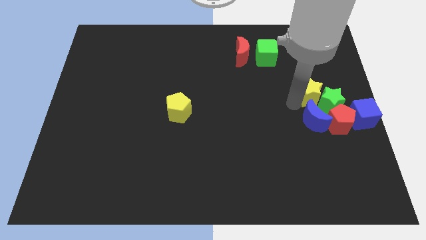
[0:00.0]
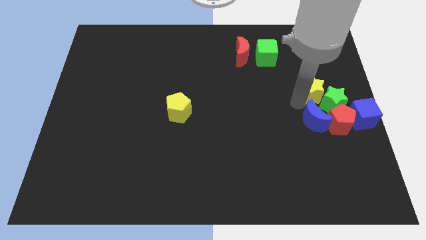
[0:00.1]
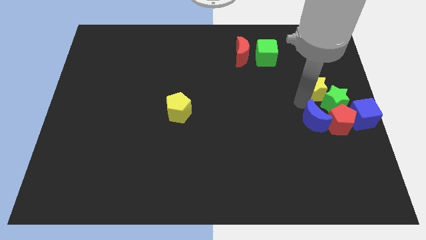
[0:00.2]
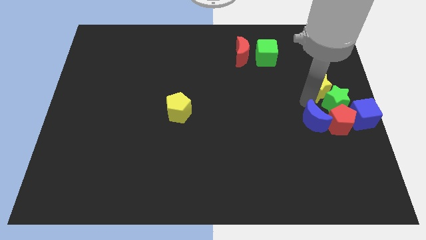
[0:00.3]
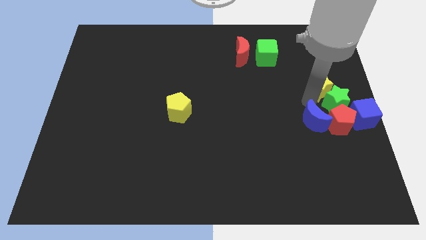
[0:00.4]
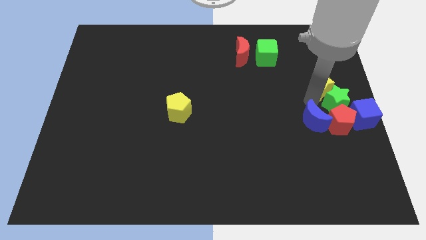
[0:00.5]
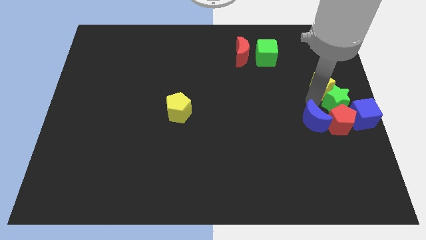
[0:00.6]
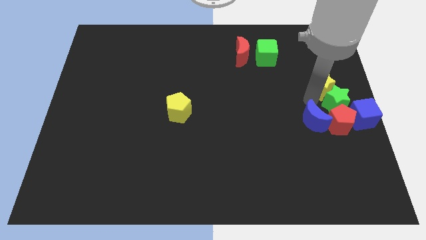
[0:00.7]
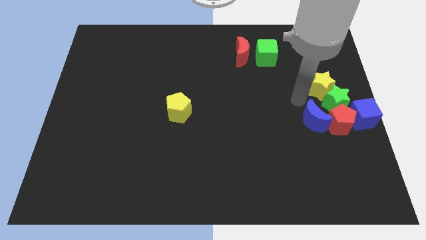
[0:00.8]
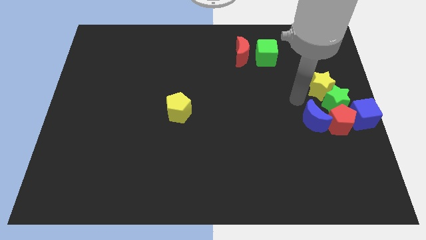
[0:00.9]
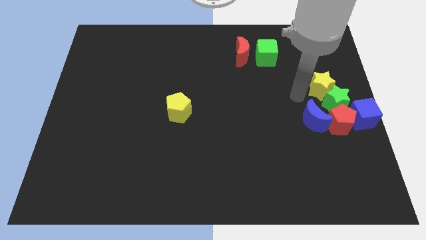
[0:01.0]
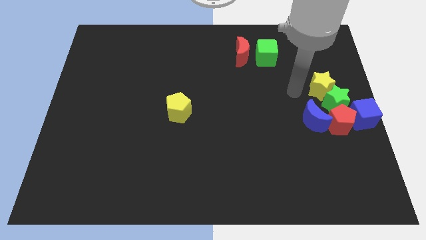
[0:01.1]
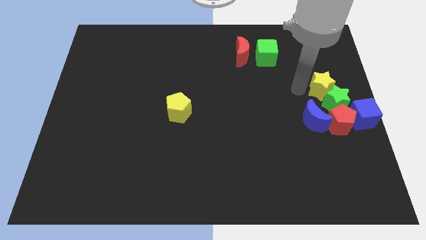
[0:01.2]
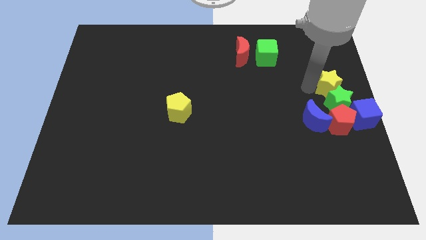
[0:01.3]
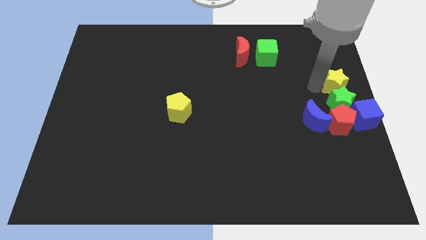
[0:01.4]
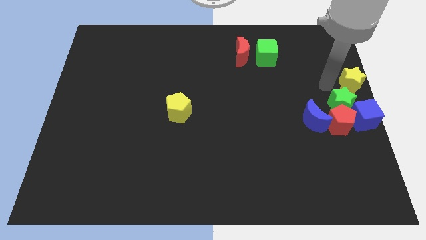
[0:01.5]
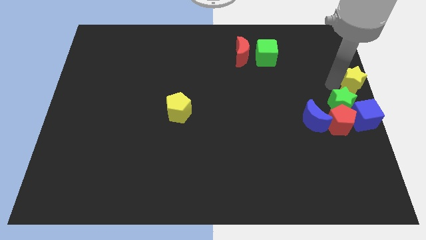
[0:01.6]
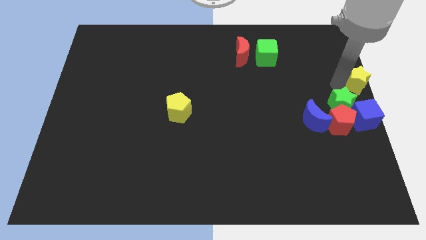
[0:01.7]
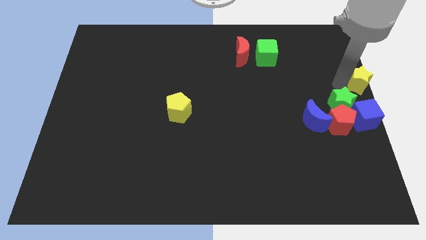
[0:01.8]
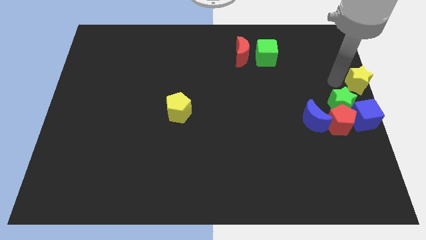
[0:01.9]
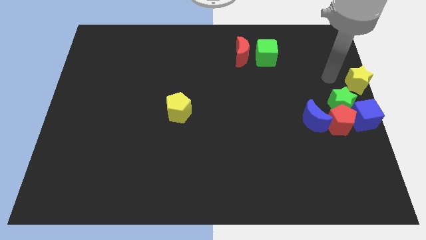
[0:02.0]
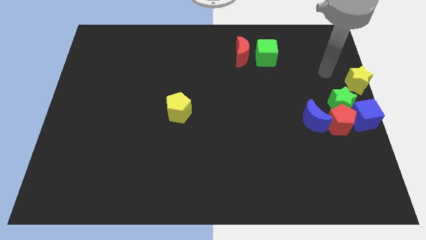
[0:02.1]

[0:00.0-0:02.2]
push the yellow star to the centre right of the board above the group of blocks

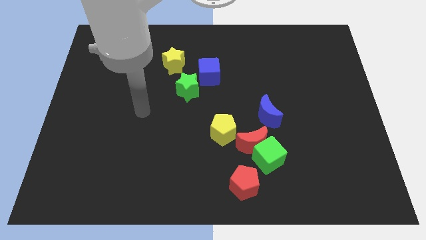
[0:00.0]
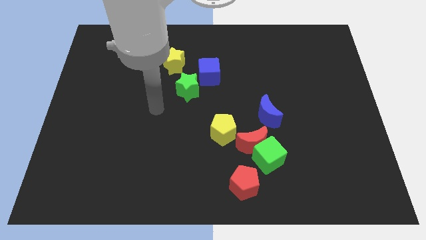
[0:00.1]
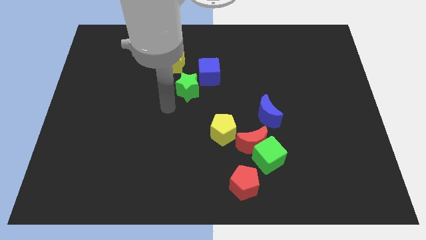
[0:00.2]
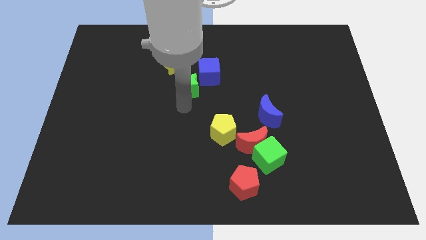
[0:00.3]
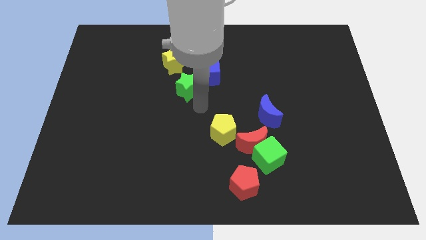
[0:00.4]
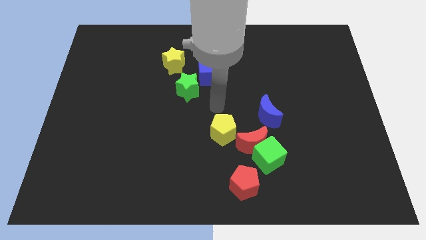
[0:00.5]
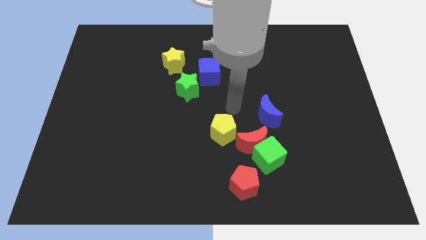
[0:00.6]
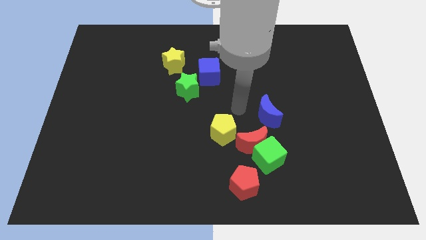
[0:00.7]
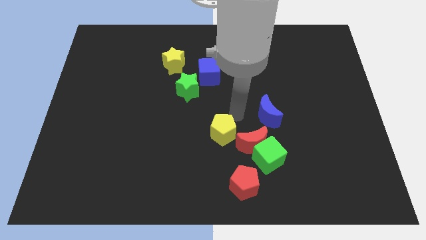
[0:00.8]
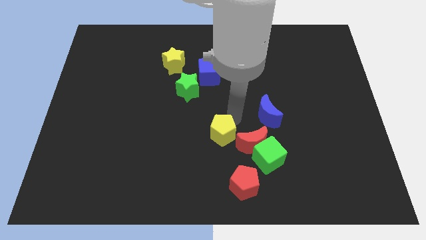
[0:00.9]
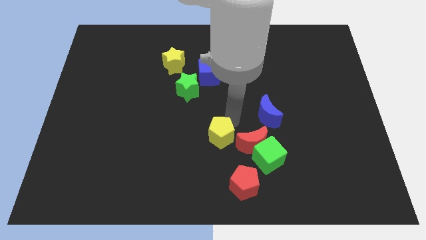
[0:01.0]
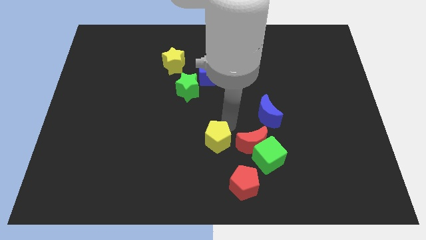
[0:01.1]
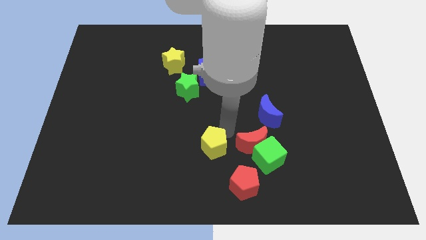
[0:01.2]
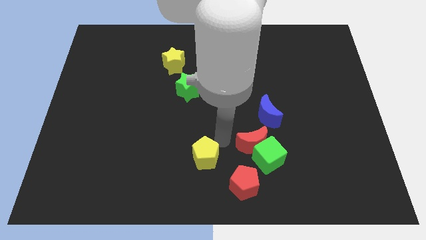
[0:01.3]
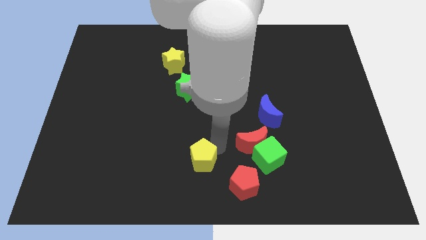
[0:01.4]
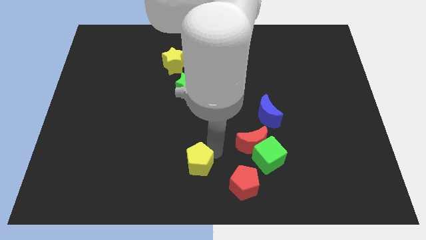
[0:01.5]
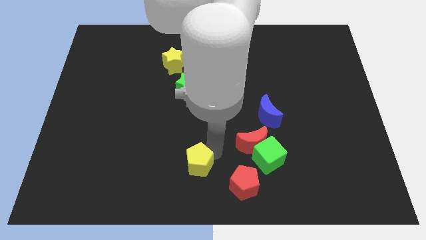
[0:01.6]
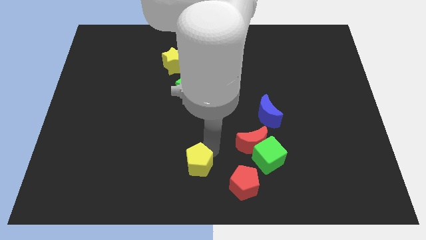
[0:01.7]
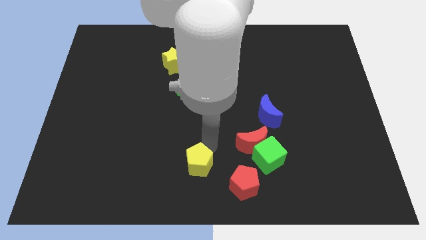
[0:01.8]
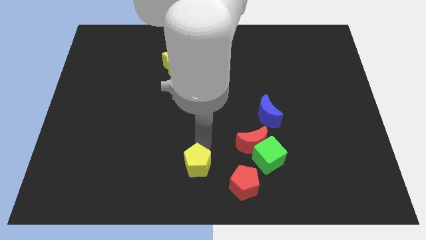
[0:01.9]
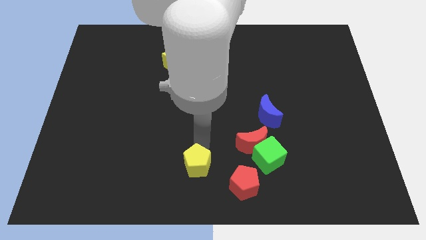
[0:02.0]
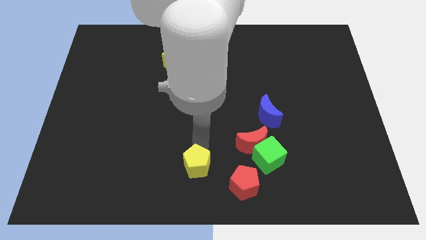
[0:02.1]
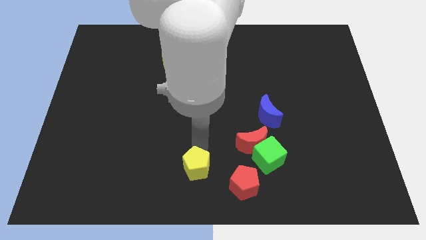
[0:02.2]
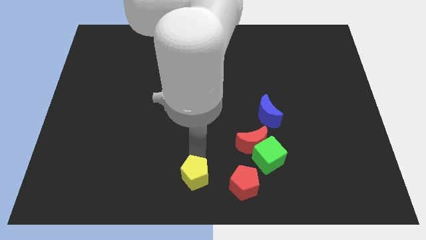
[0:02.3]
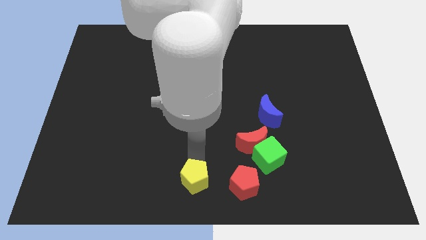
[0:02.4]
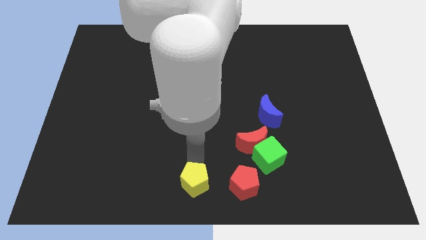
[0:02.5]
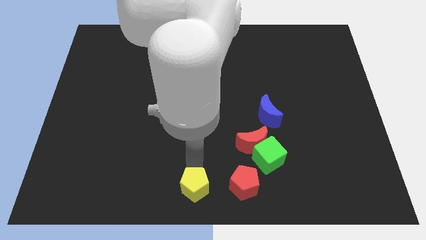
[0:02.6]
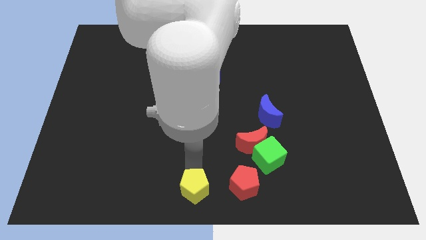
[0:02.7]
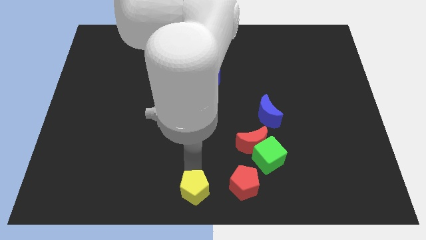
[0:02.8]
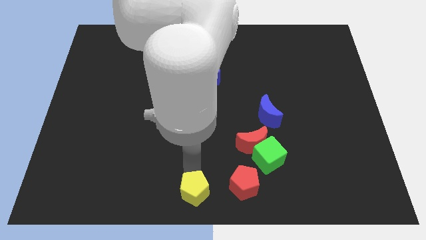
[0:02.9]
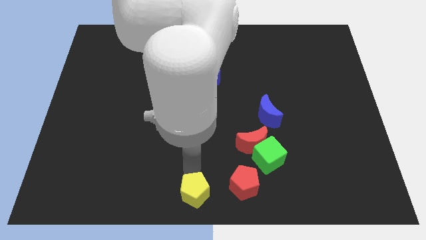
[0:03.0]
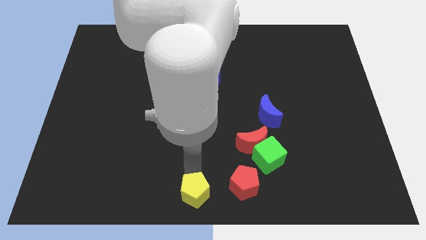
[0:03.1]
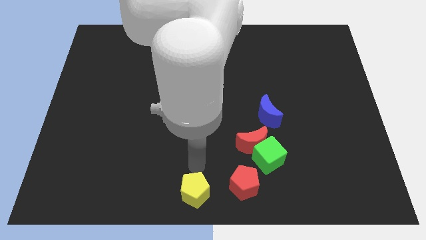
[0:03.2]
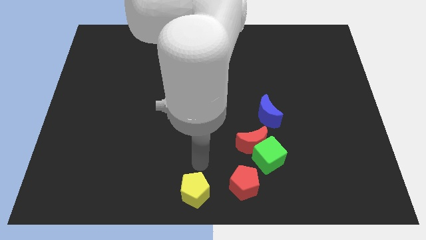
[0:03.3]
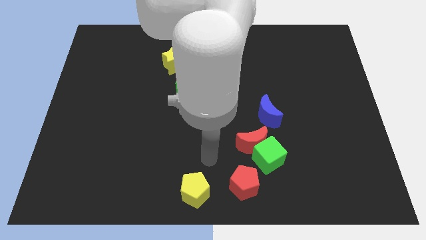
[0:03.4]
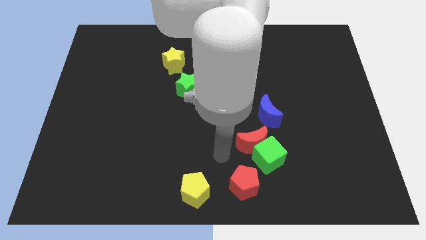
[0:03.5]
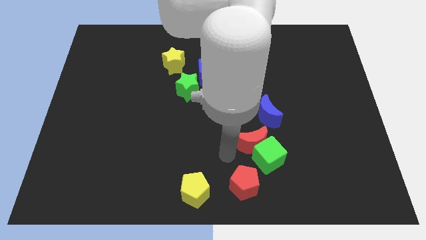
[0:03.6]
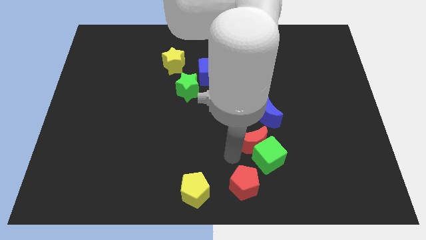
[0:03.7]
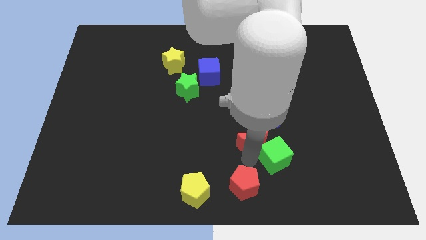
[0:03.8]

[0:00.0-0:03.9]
move the yellow pentagon to the bottom center of the board

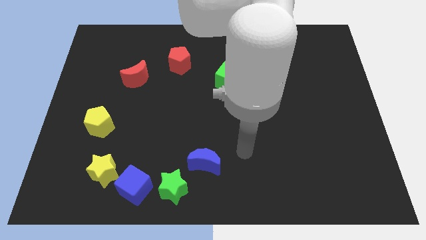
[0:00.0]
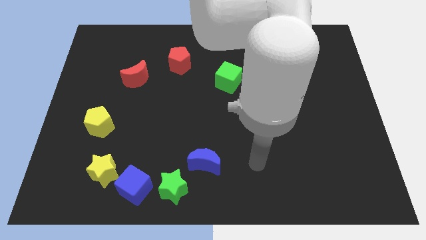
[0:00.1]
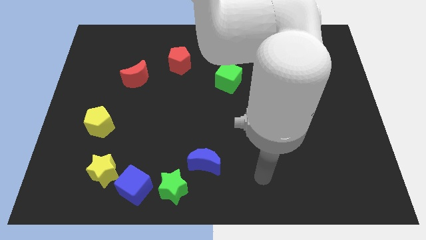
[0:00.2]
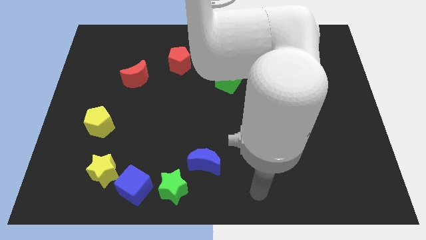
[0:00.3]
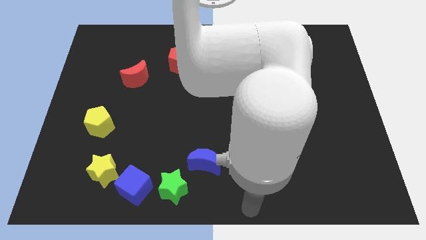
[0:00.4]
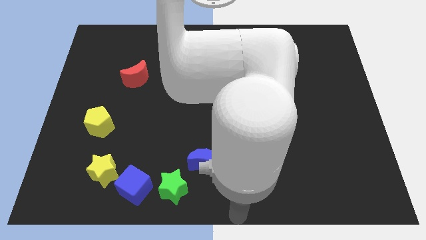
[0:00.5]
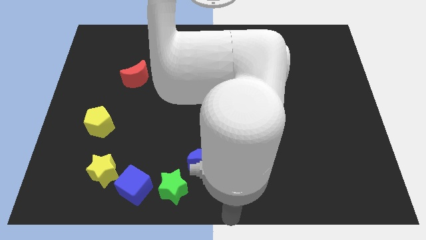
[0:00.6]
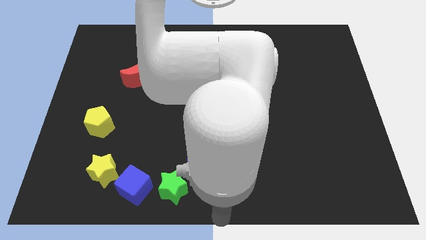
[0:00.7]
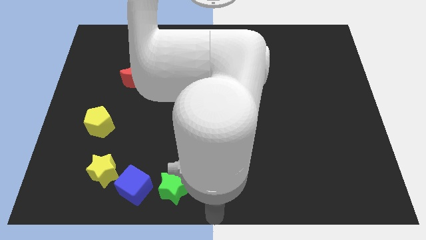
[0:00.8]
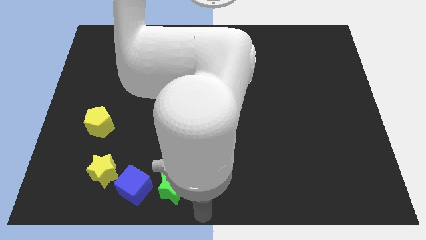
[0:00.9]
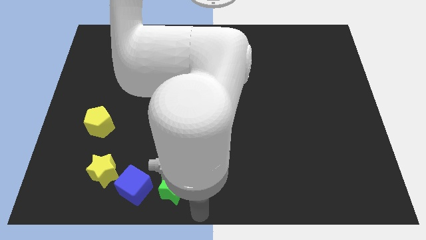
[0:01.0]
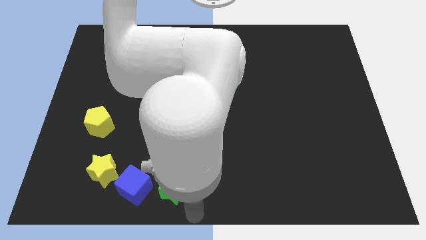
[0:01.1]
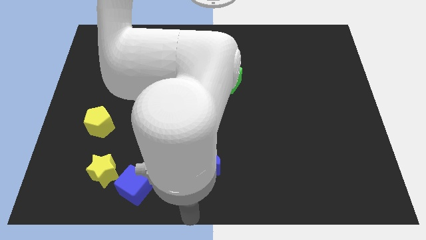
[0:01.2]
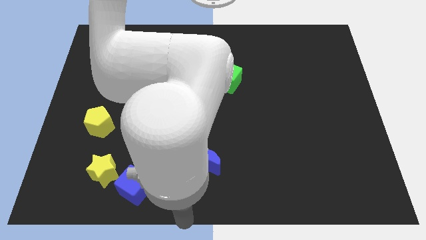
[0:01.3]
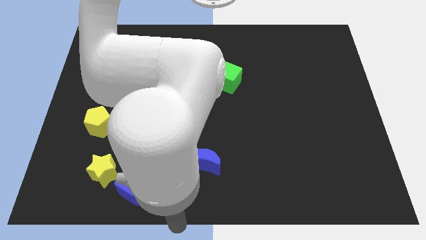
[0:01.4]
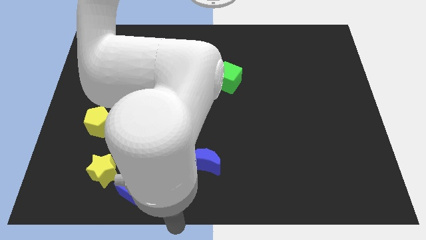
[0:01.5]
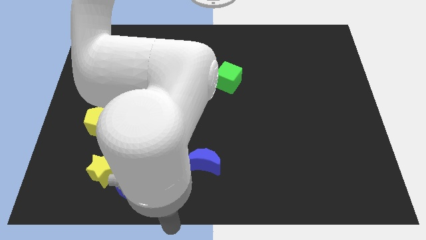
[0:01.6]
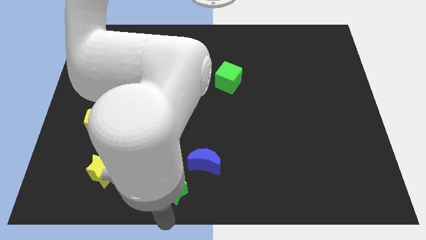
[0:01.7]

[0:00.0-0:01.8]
move your arm to the bottom of the green star

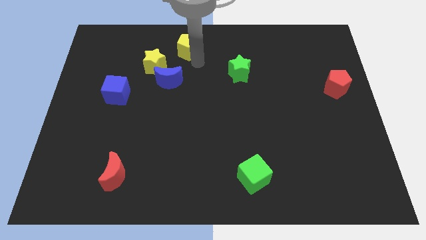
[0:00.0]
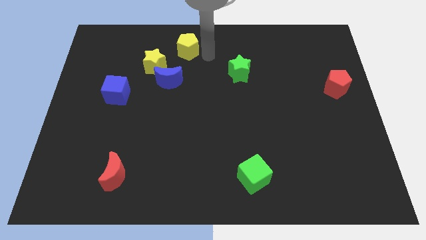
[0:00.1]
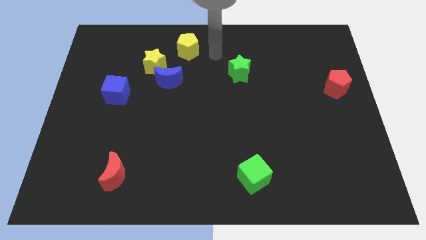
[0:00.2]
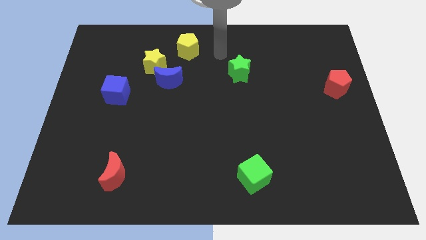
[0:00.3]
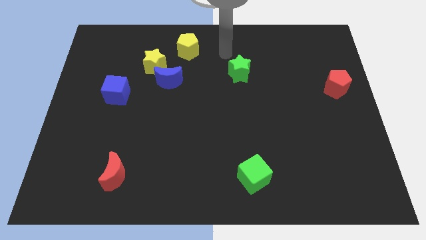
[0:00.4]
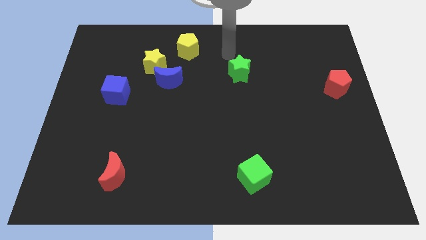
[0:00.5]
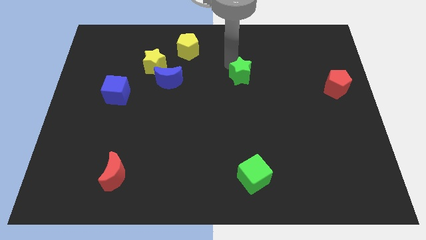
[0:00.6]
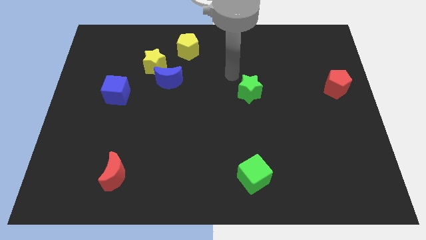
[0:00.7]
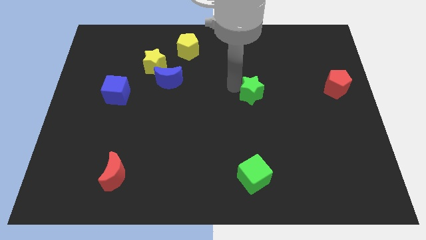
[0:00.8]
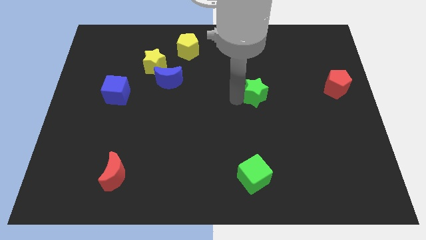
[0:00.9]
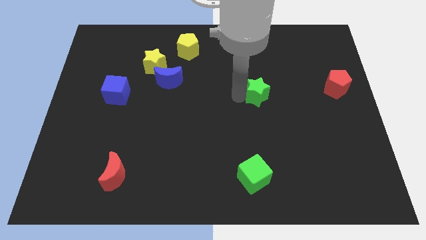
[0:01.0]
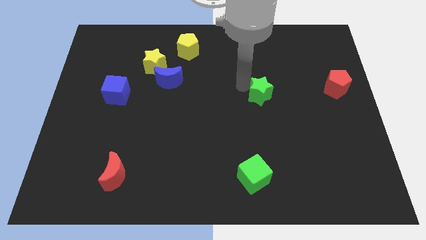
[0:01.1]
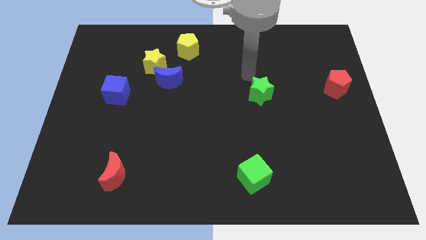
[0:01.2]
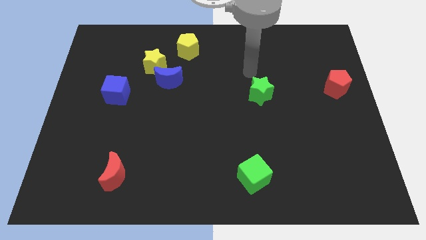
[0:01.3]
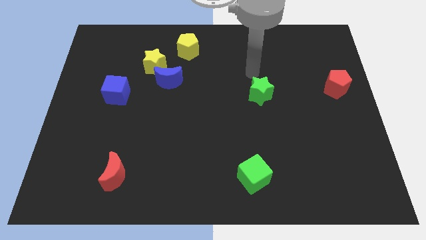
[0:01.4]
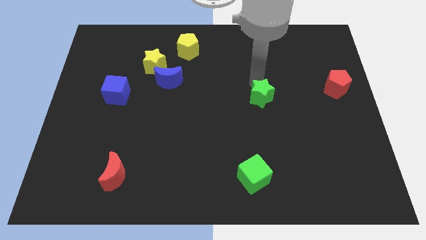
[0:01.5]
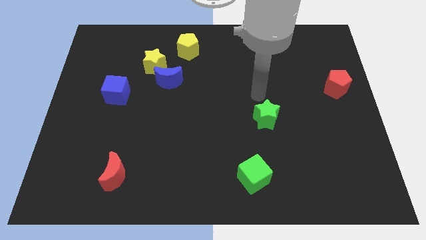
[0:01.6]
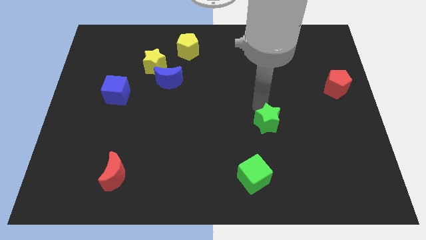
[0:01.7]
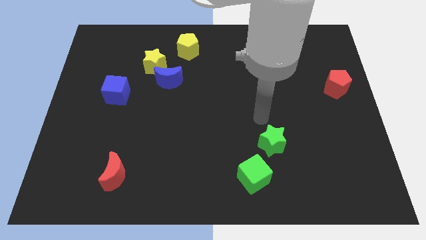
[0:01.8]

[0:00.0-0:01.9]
move the green star above green cube
